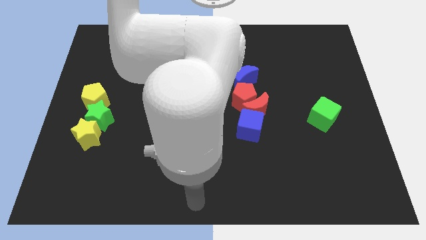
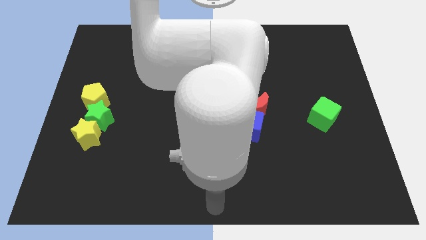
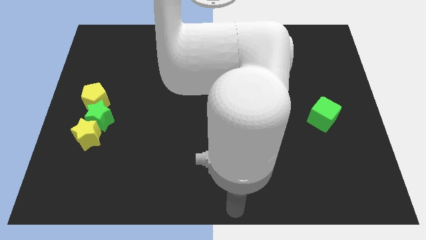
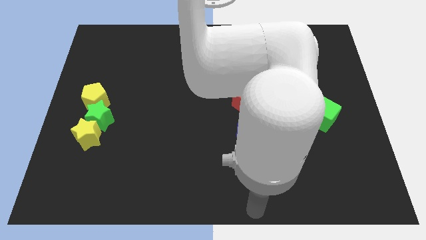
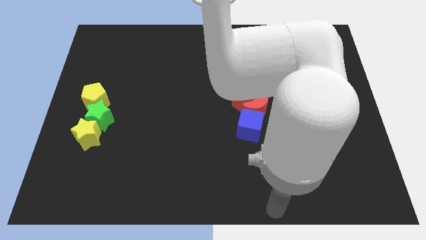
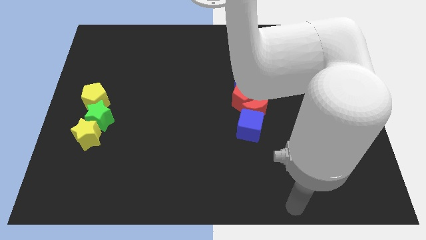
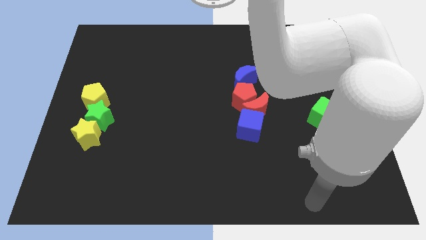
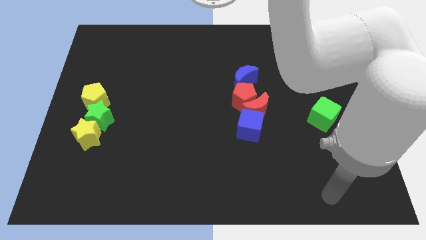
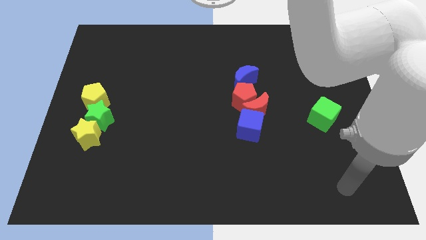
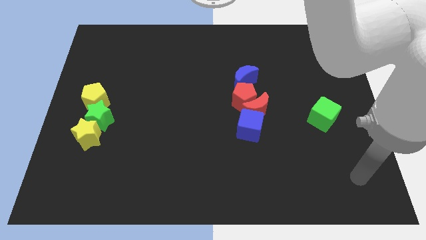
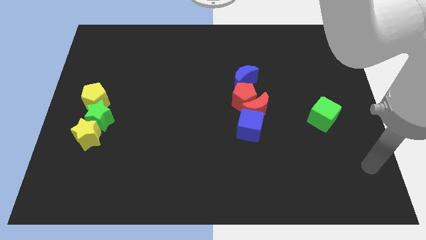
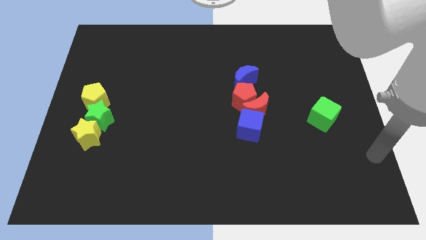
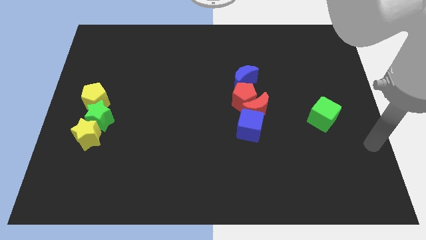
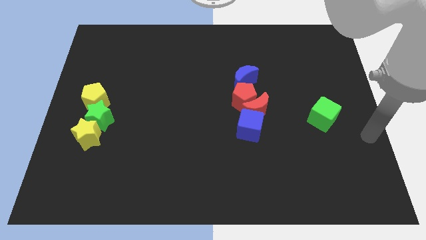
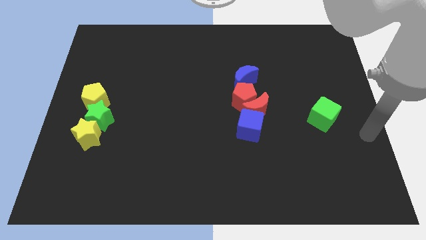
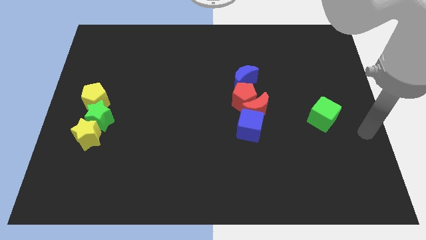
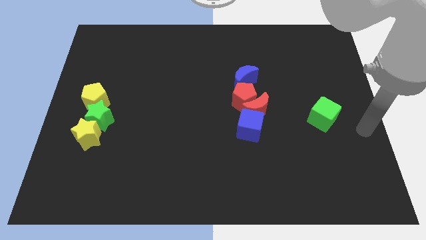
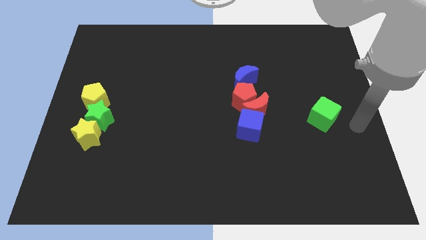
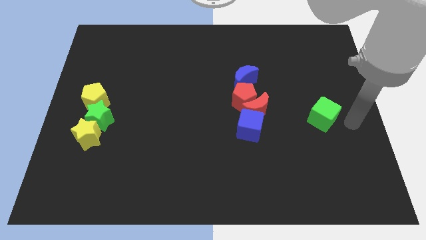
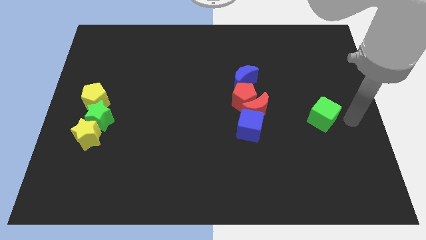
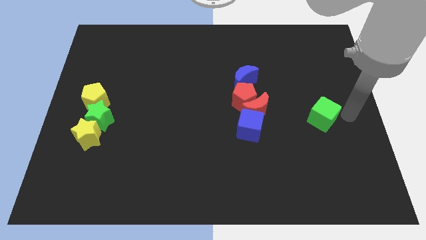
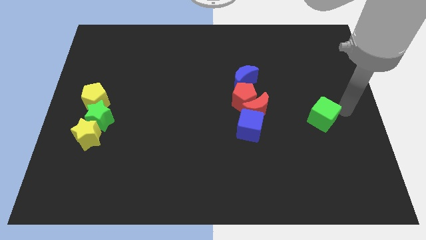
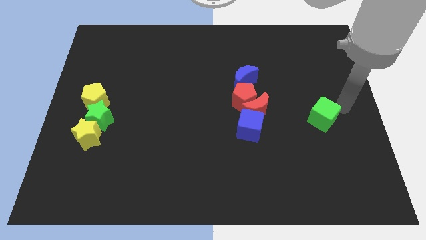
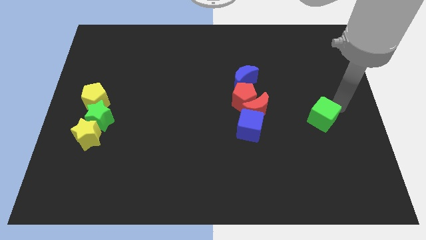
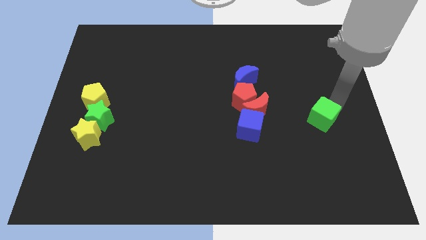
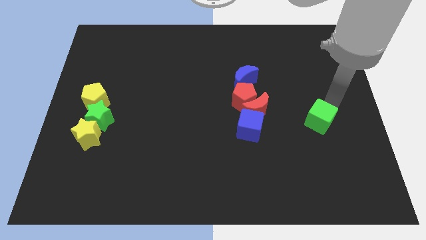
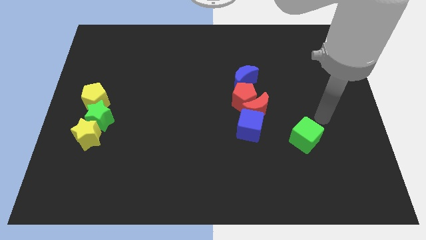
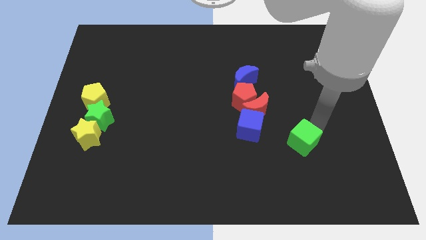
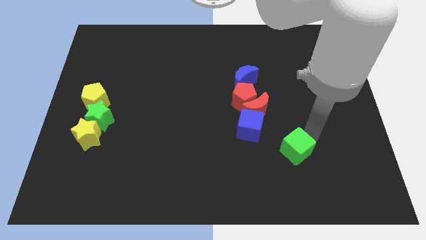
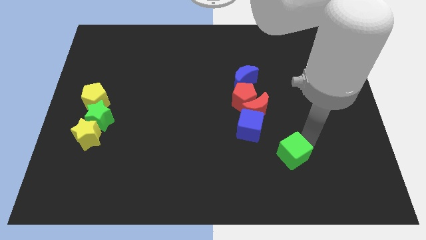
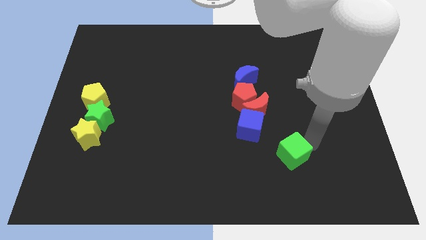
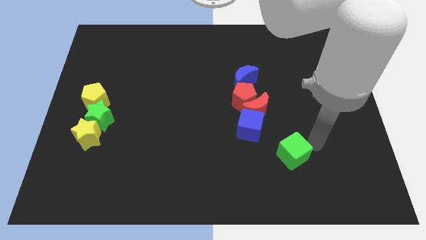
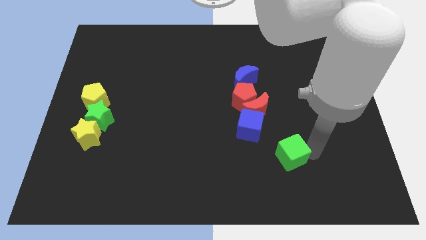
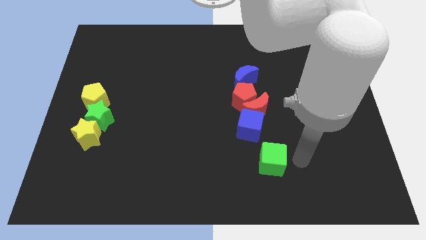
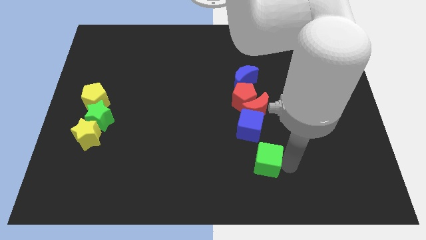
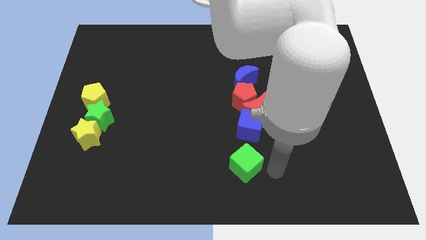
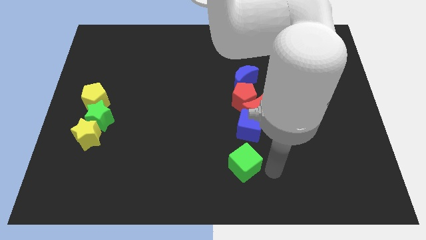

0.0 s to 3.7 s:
place the green cube below the blue cube

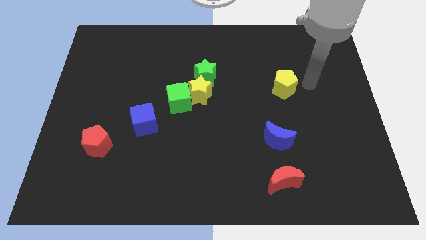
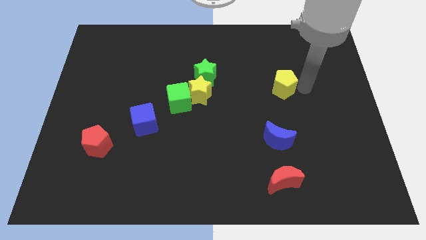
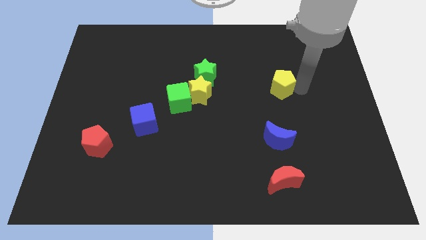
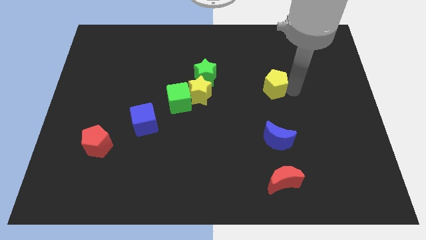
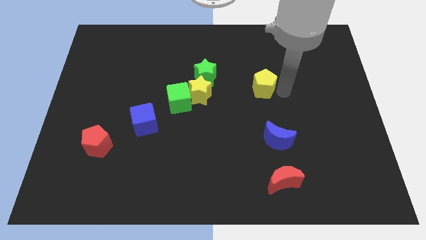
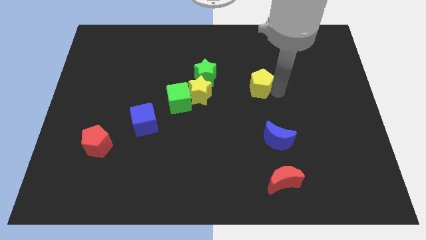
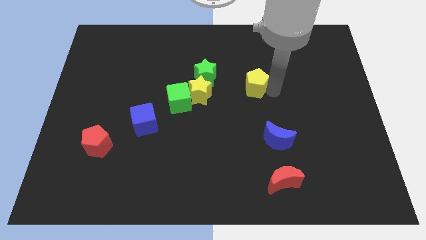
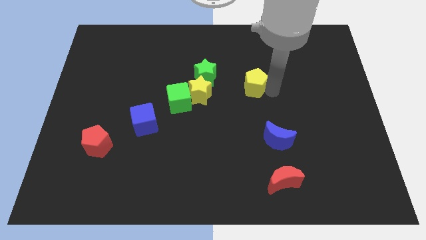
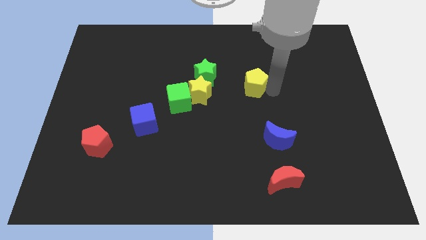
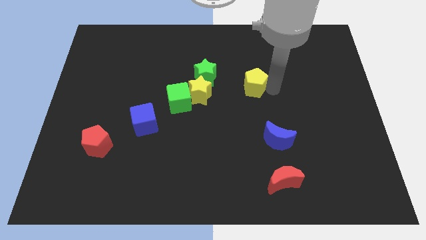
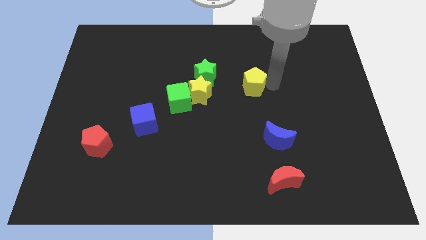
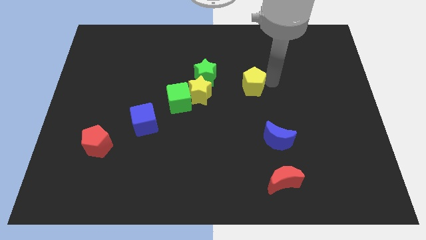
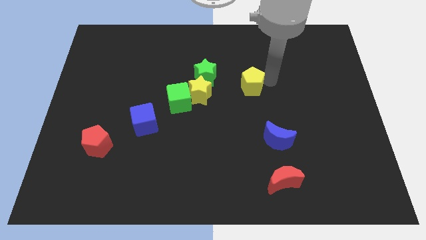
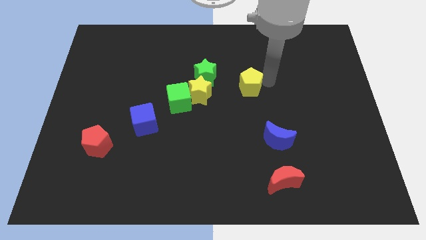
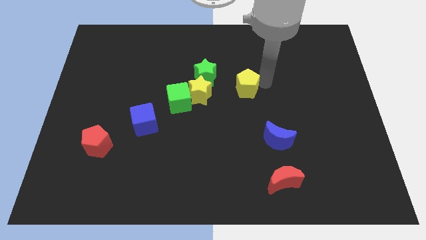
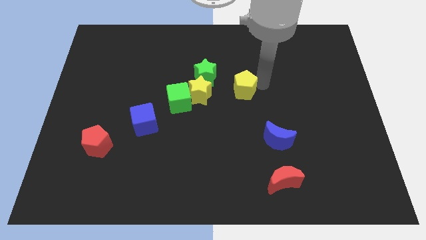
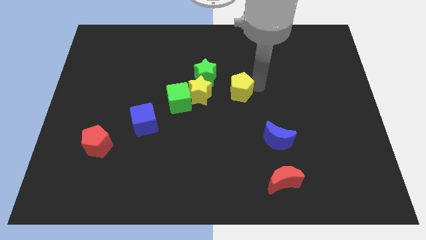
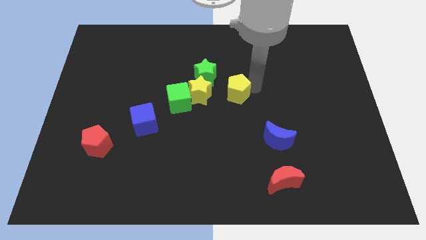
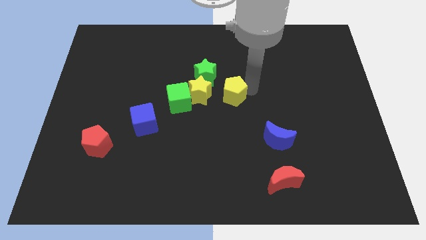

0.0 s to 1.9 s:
move the yellow pentagon towards the yellow star

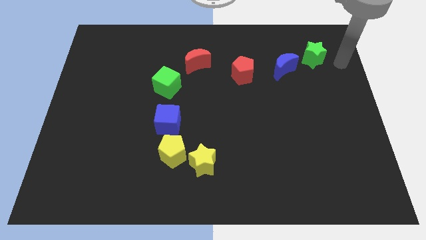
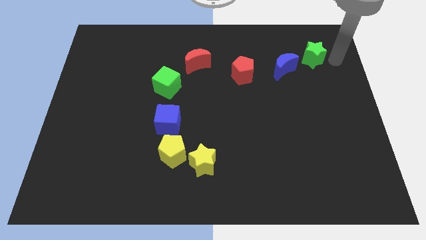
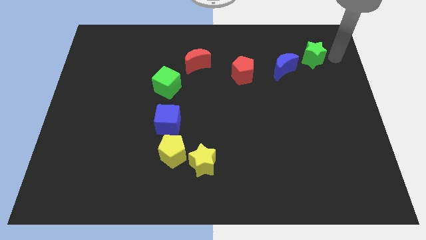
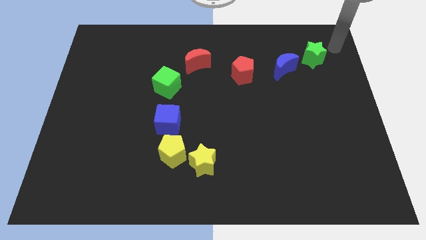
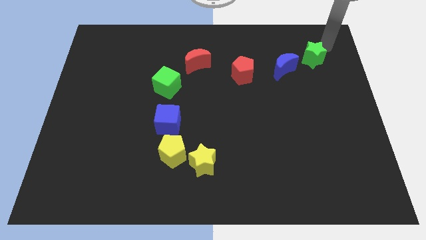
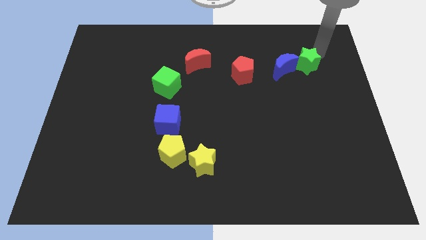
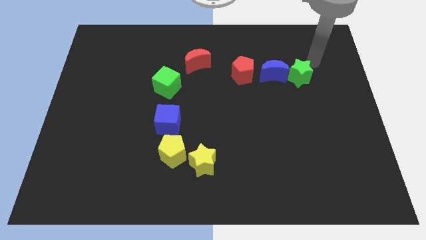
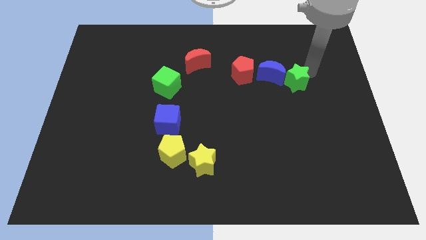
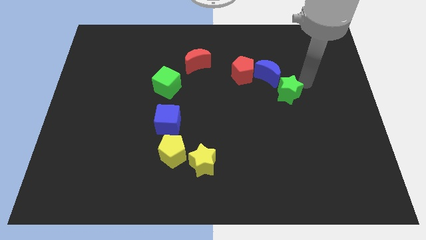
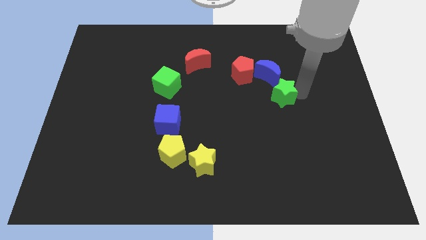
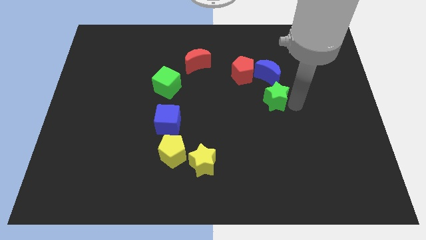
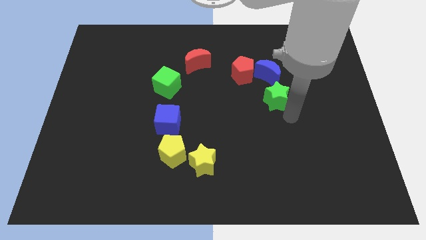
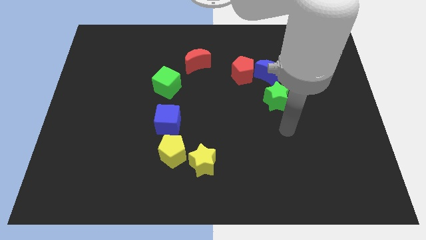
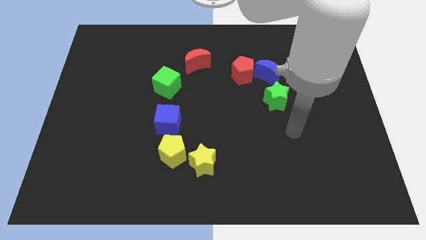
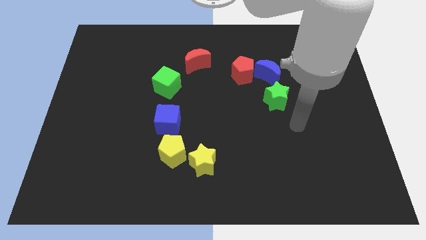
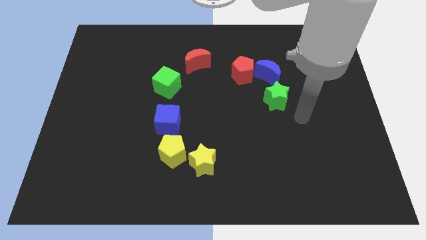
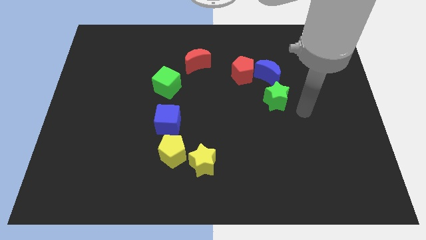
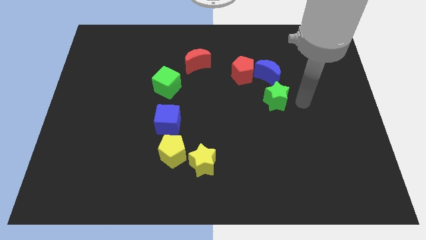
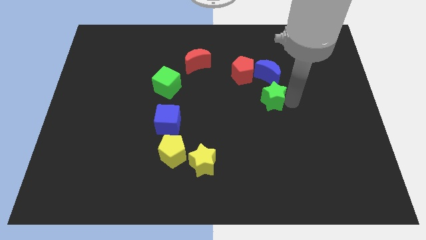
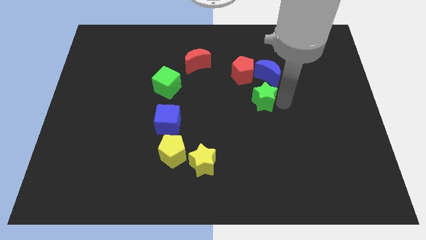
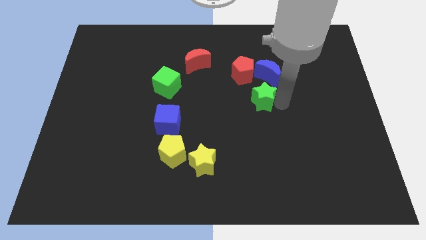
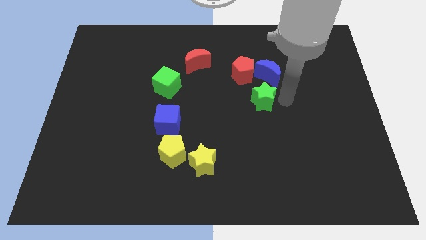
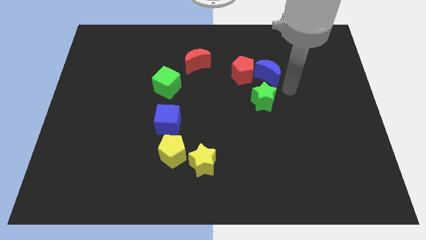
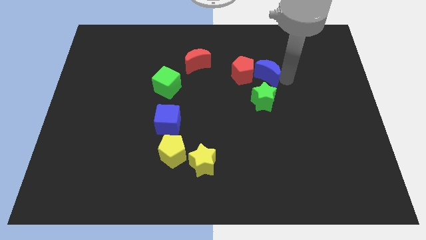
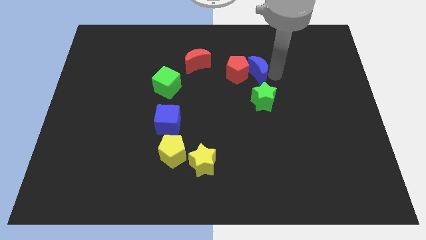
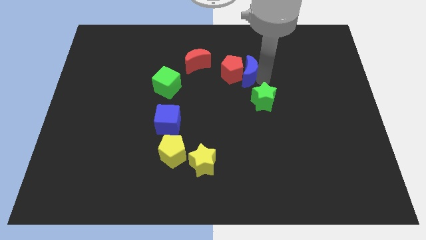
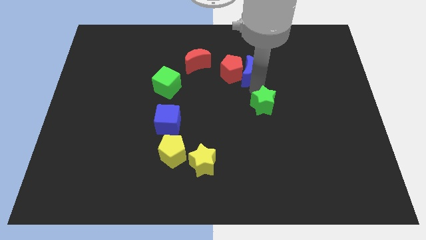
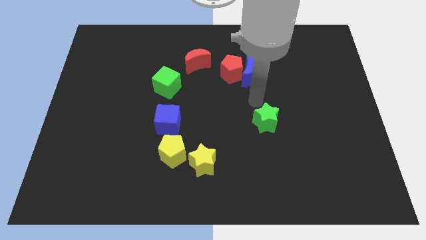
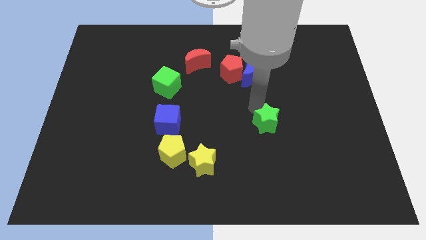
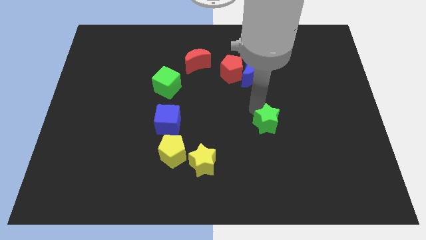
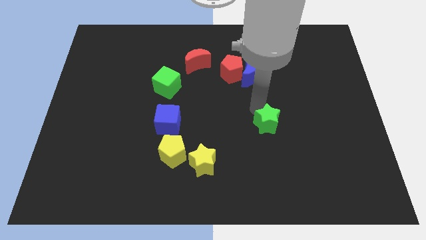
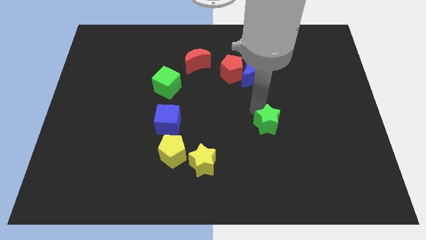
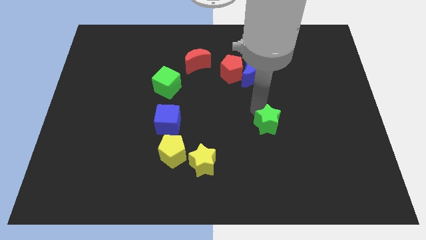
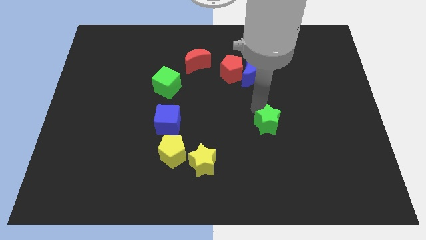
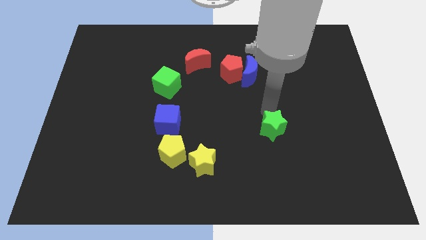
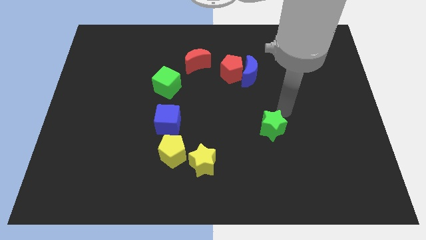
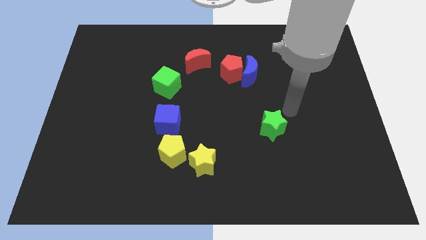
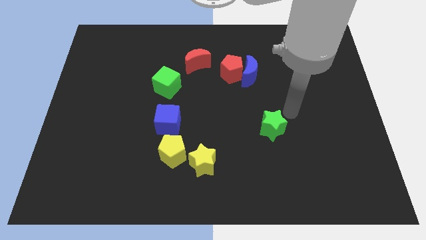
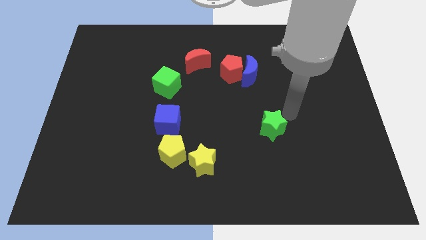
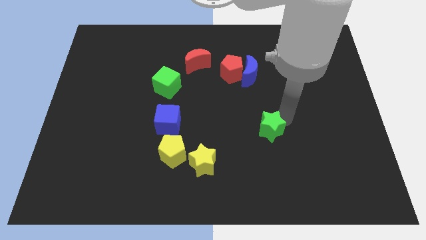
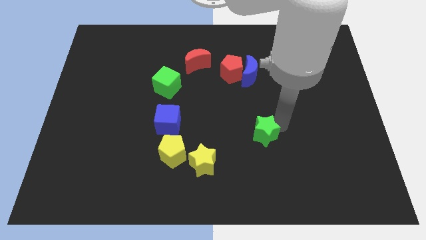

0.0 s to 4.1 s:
place the green star vertically below the blue crescent
